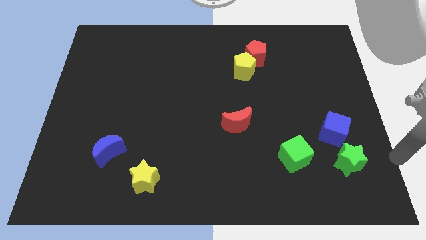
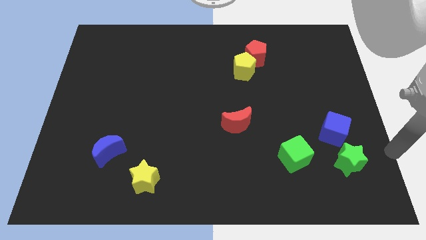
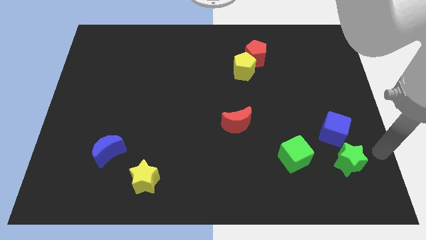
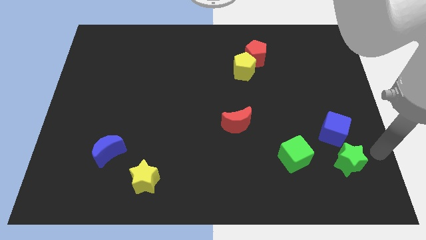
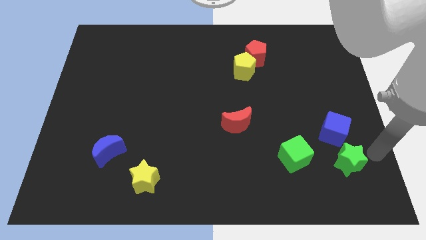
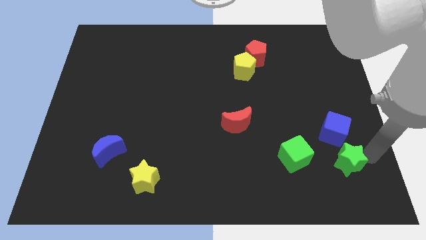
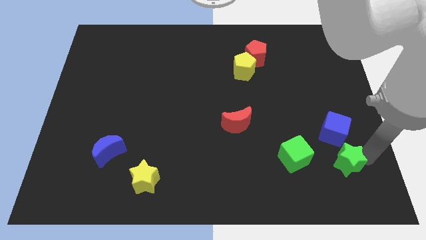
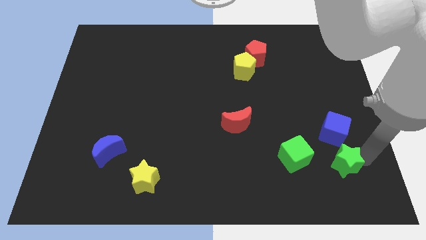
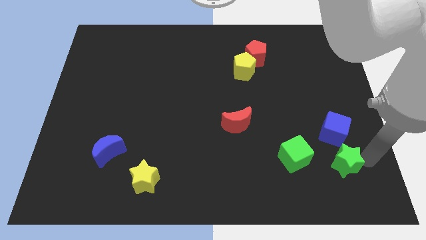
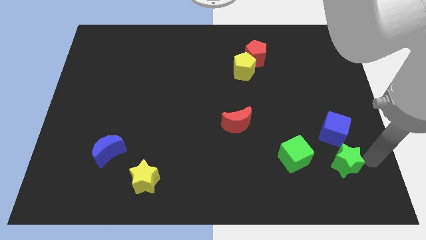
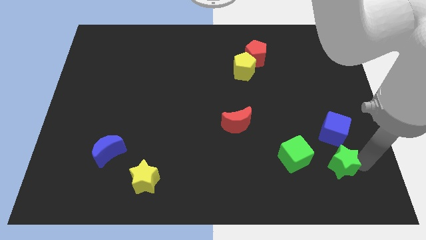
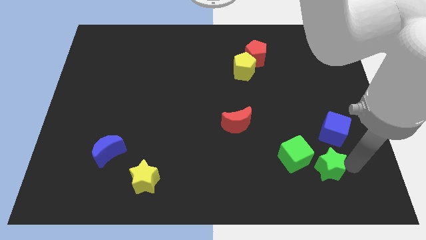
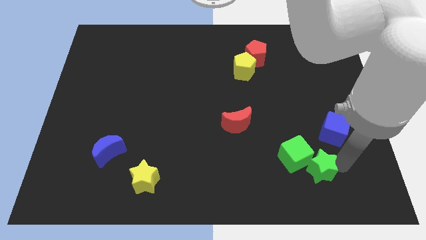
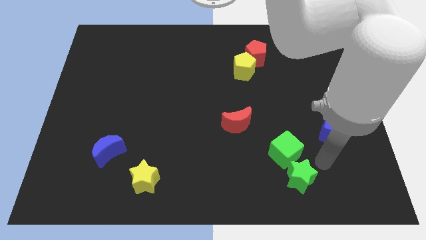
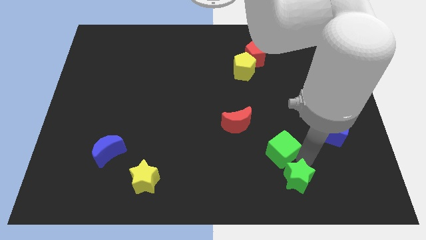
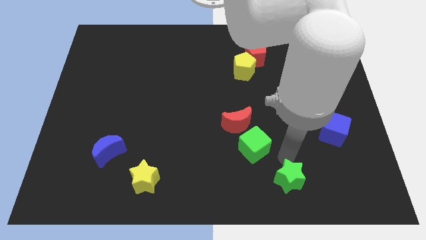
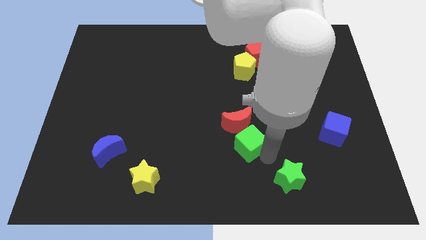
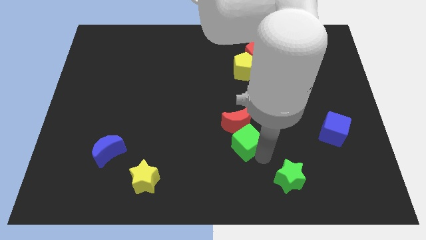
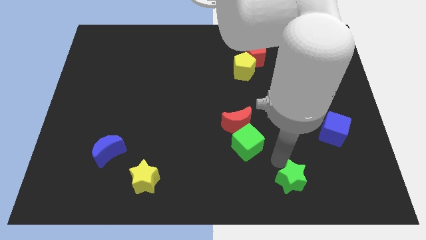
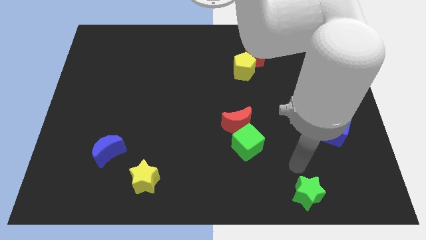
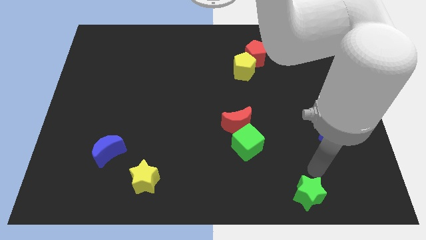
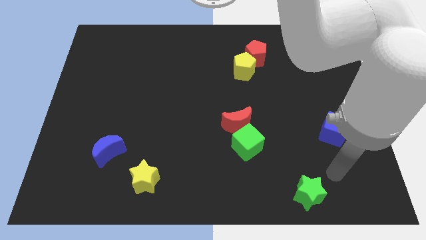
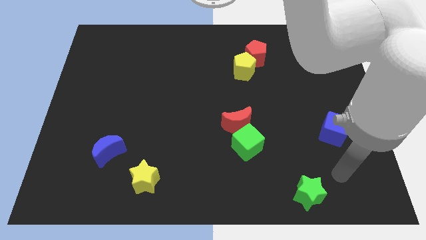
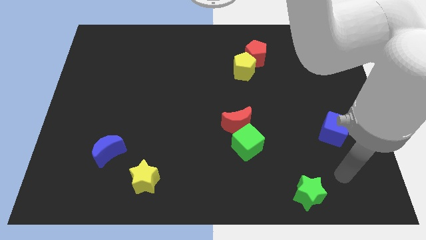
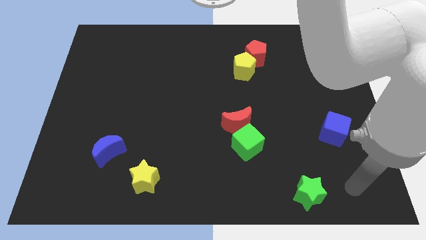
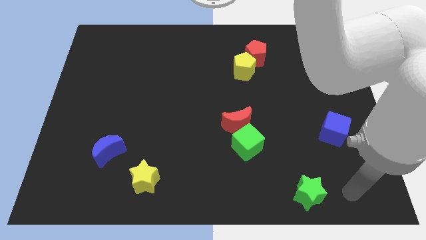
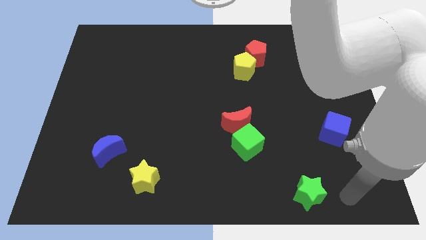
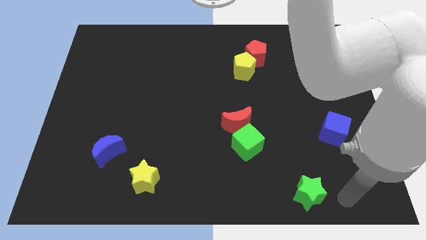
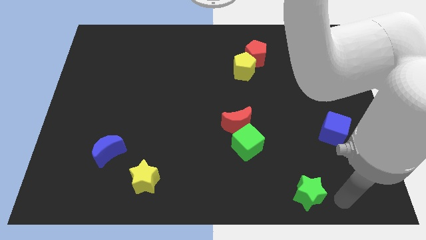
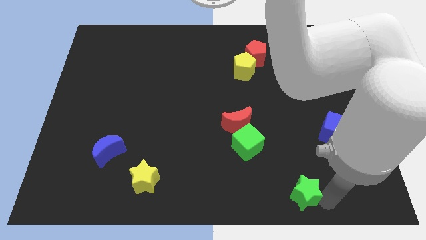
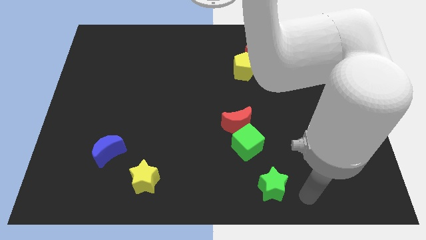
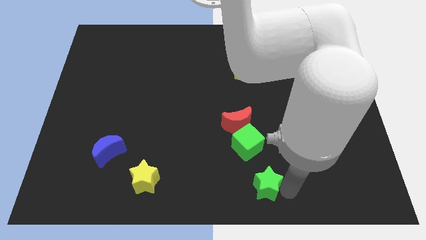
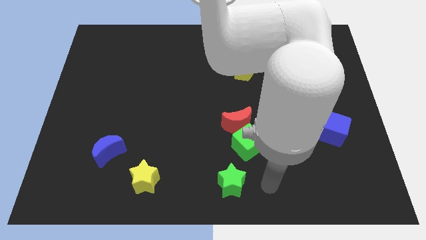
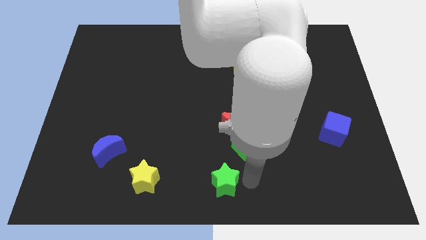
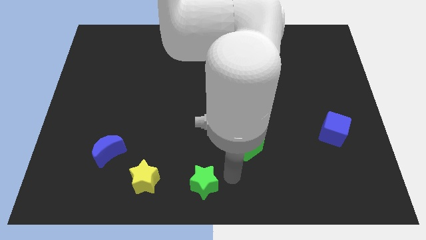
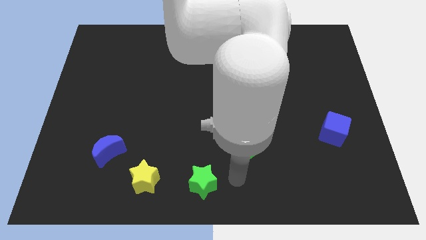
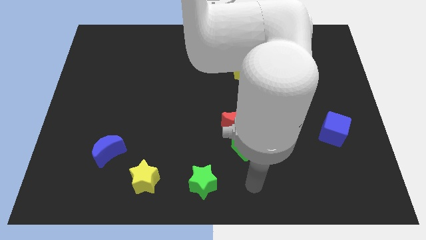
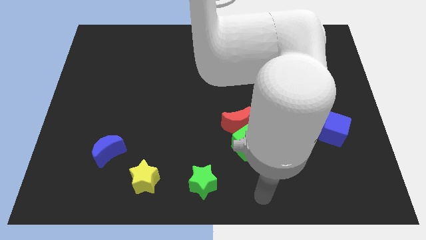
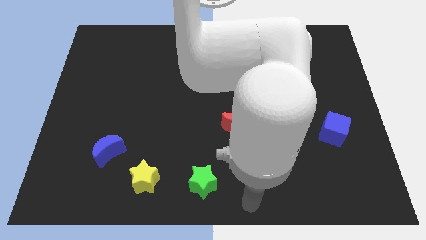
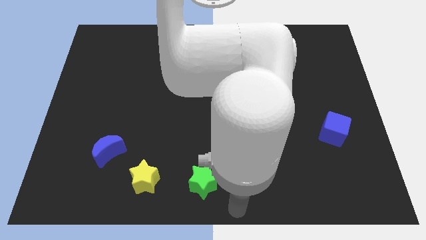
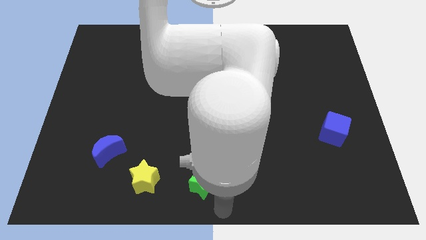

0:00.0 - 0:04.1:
place the green star parallel to the yellow star

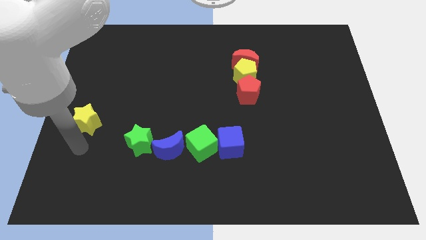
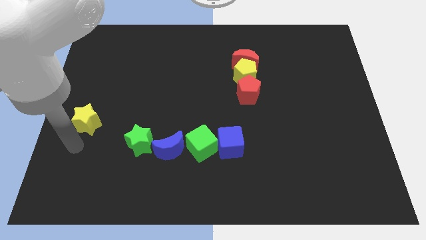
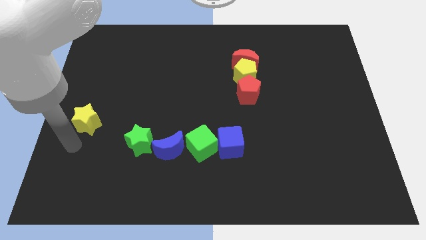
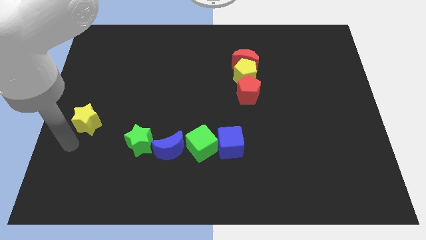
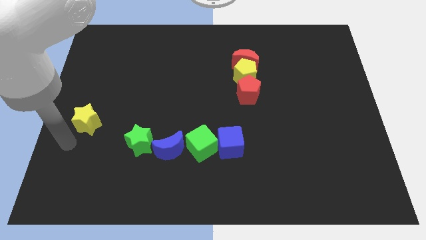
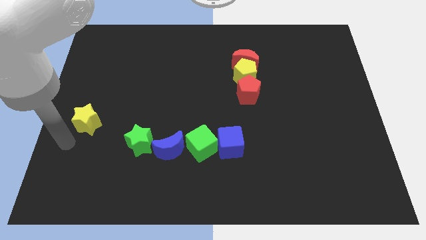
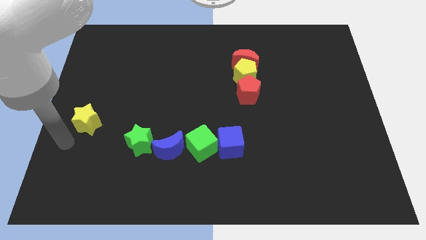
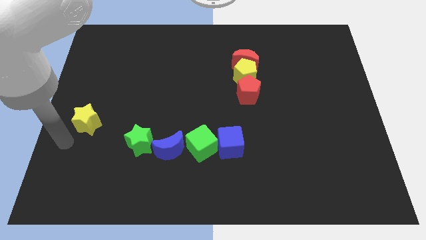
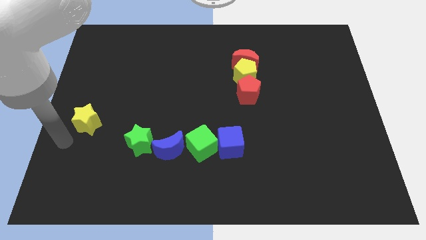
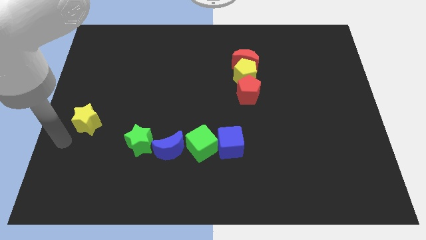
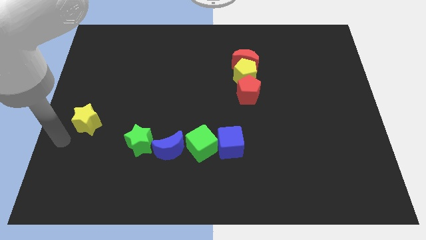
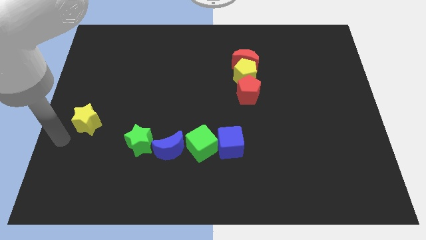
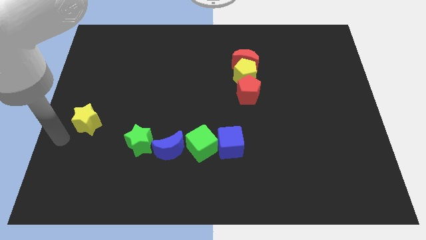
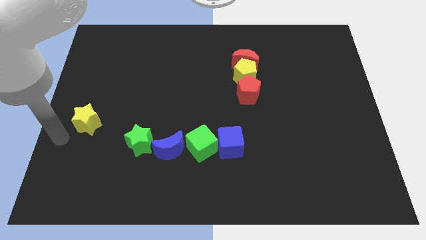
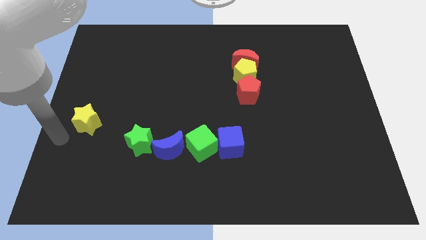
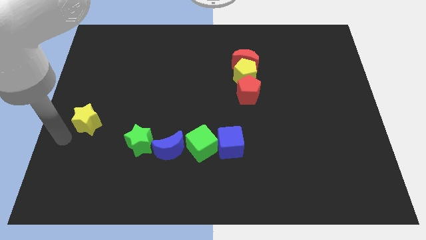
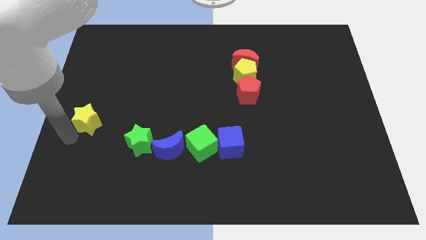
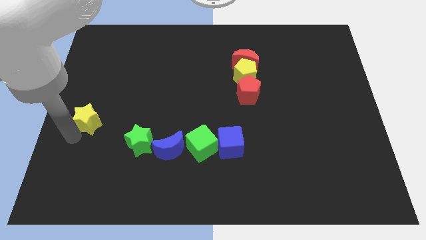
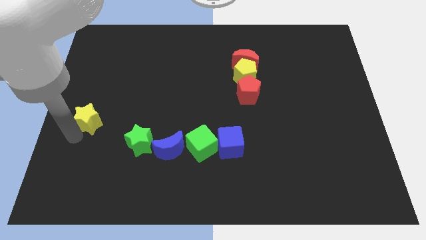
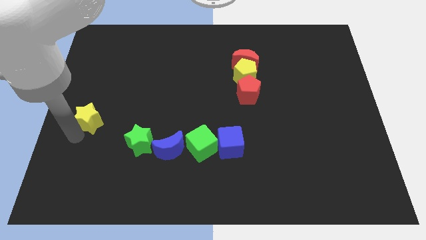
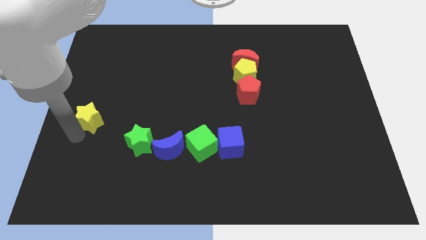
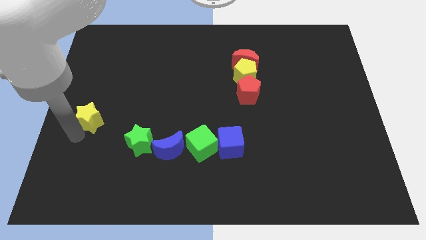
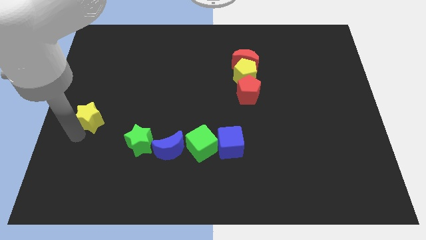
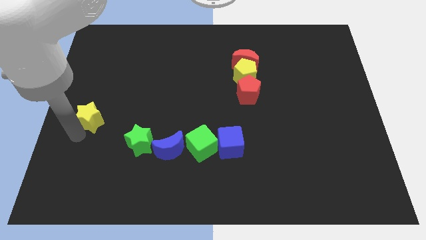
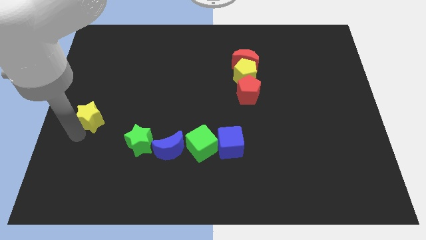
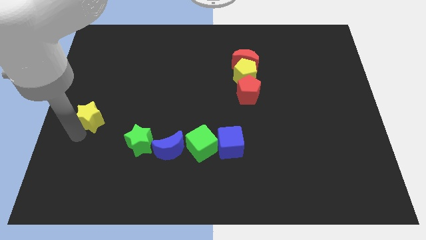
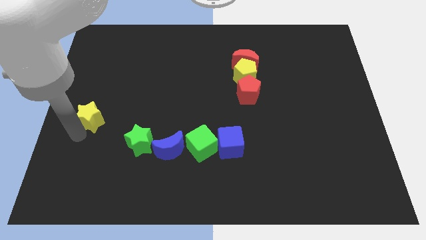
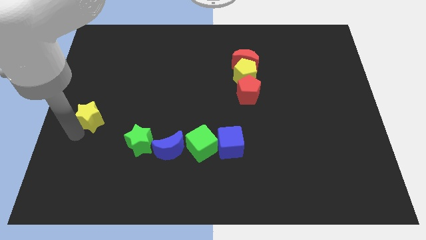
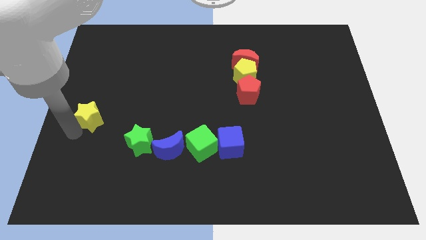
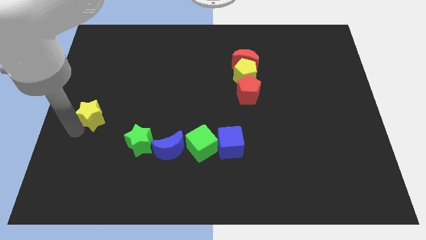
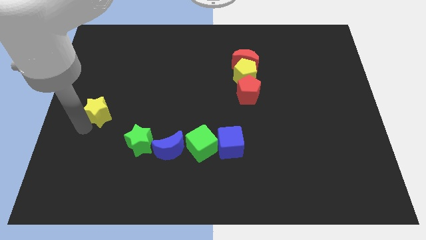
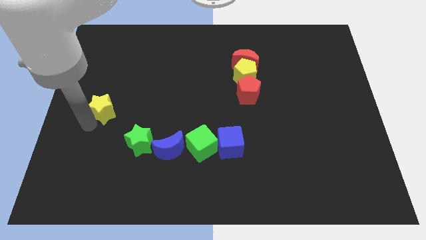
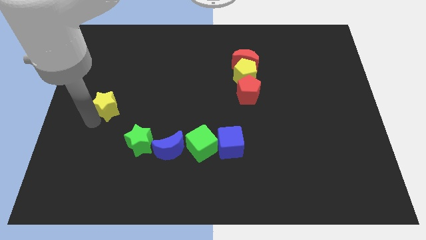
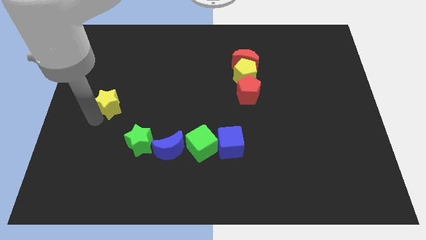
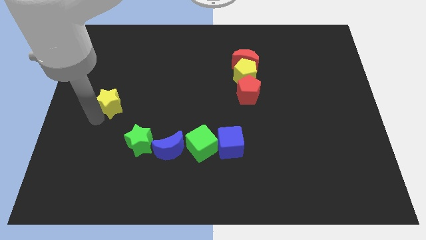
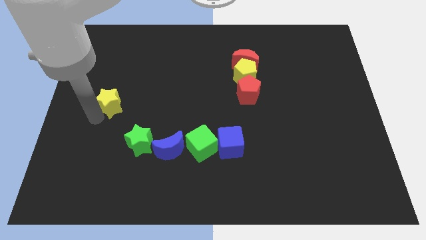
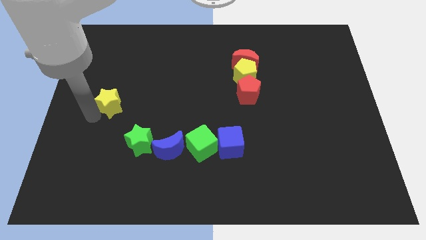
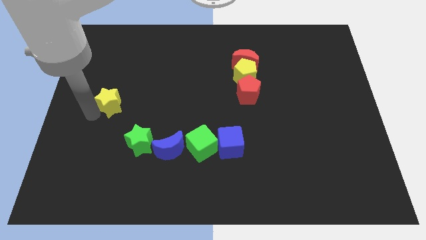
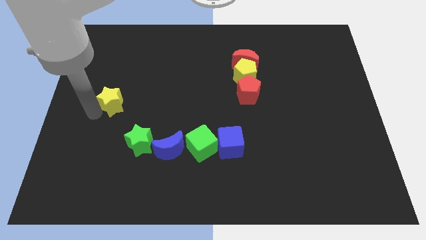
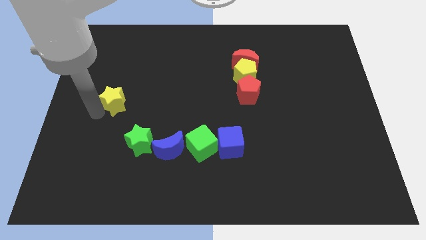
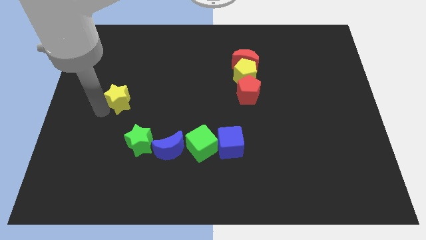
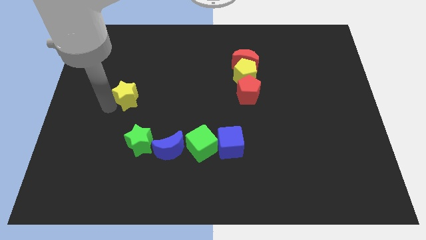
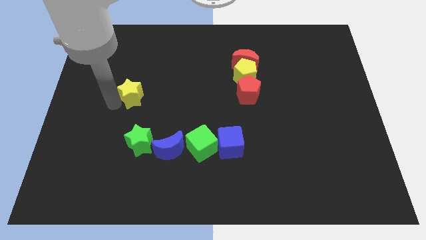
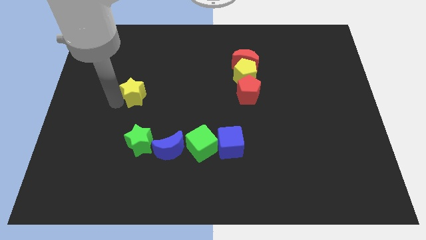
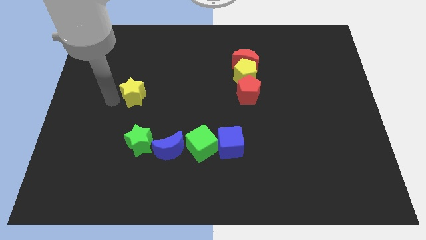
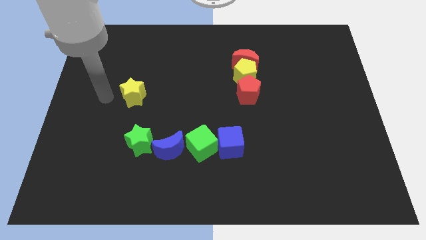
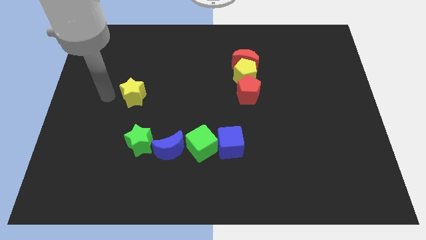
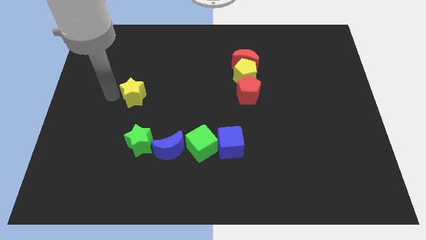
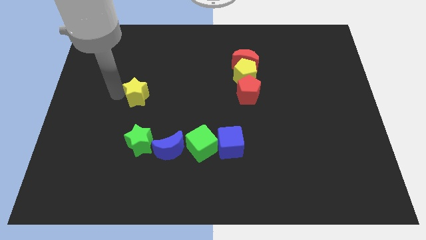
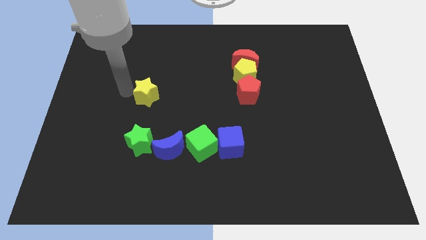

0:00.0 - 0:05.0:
move the yellow star vertically above the green star
